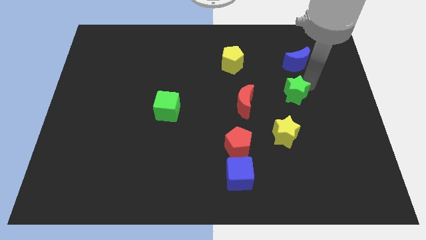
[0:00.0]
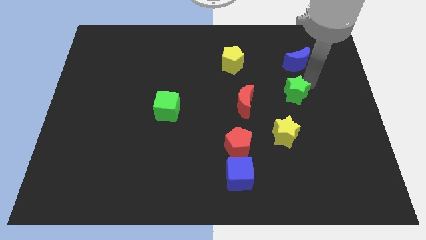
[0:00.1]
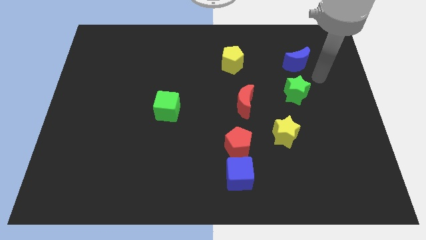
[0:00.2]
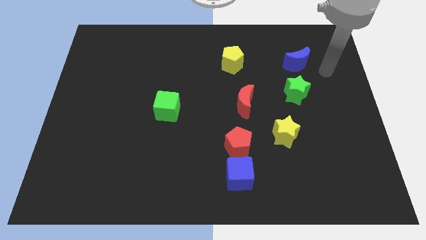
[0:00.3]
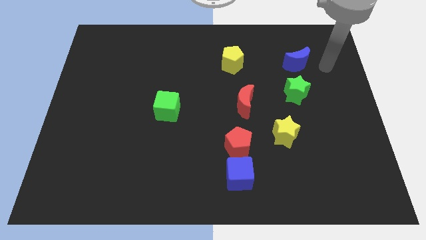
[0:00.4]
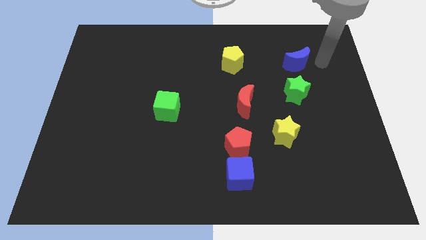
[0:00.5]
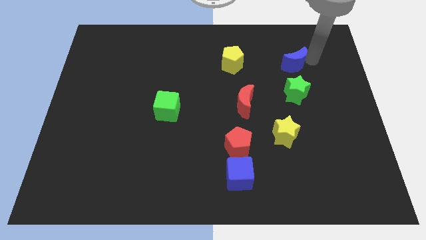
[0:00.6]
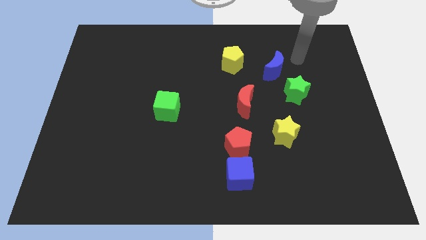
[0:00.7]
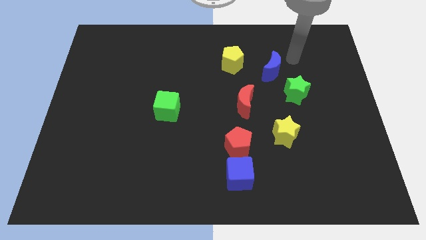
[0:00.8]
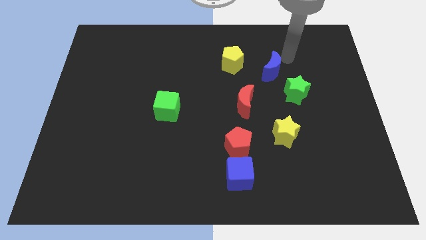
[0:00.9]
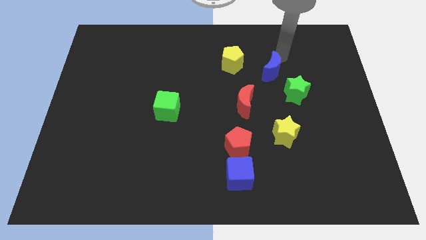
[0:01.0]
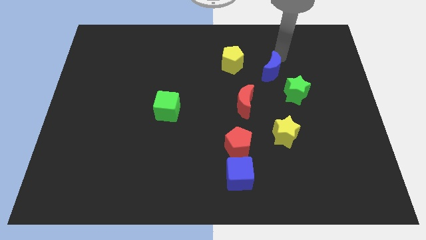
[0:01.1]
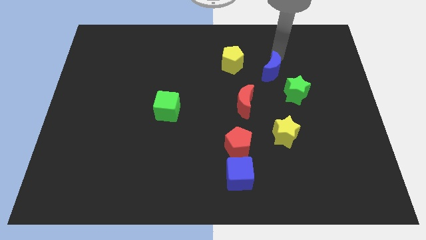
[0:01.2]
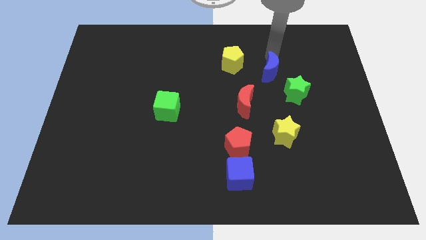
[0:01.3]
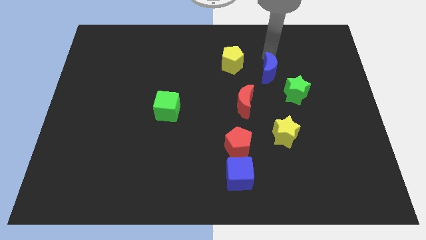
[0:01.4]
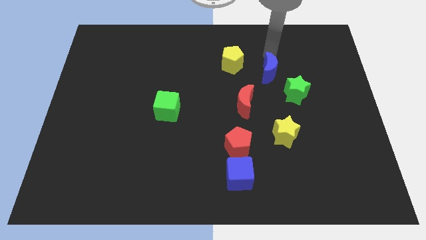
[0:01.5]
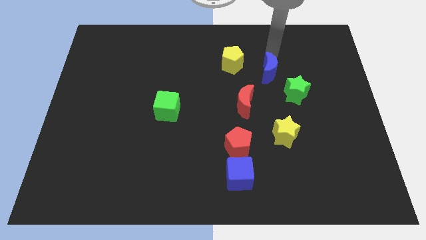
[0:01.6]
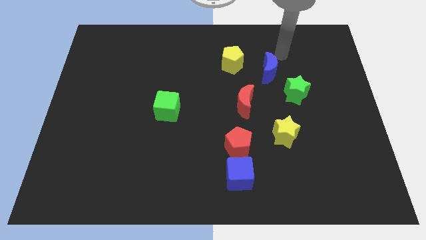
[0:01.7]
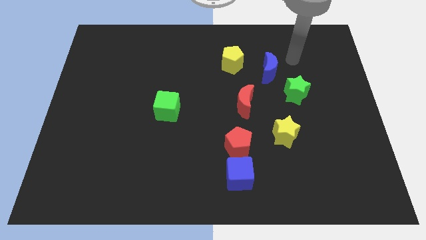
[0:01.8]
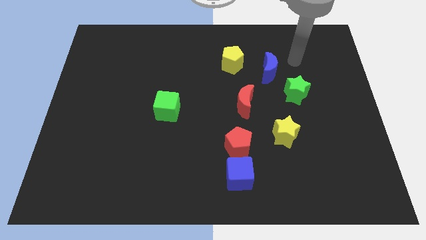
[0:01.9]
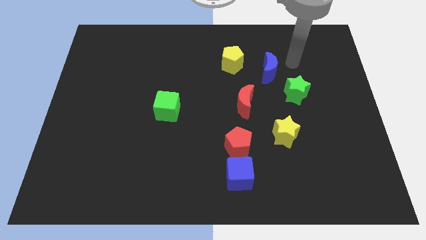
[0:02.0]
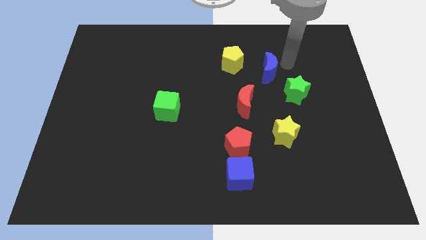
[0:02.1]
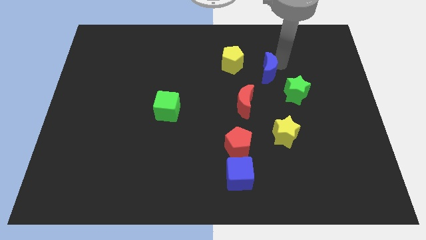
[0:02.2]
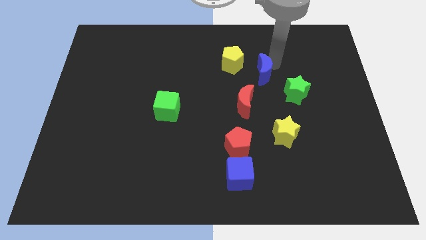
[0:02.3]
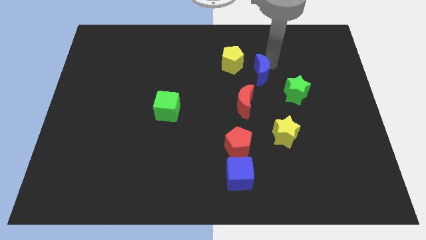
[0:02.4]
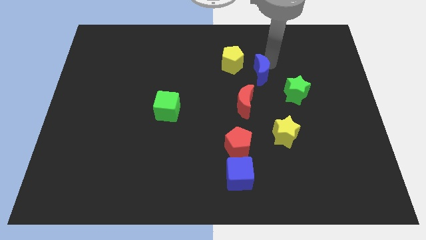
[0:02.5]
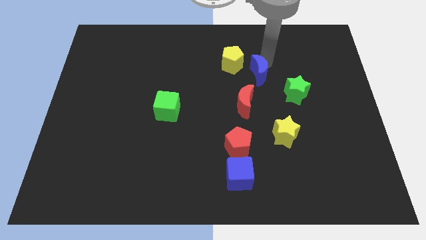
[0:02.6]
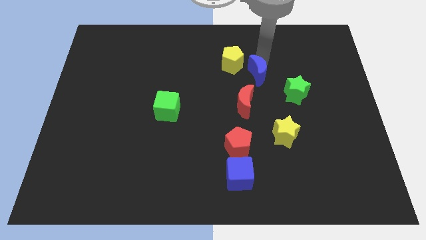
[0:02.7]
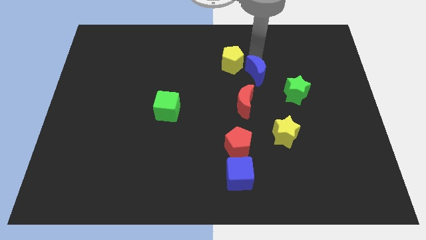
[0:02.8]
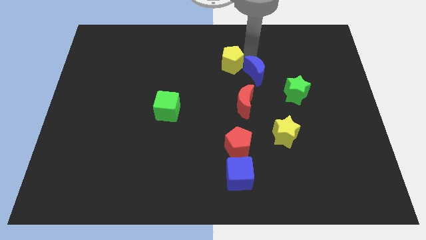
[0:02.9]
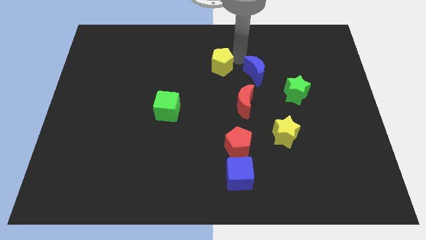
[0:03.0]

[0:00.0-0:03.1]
push the blue moon to the bottom left side of the yellow pentagon

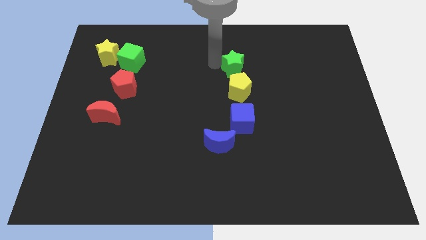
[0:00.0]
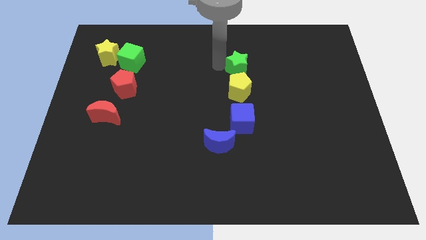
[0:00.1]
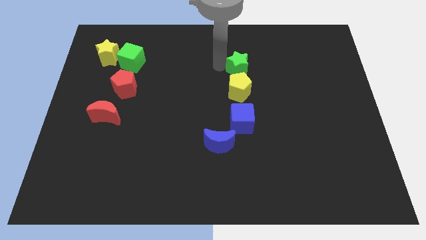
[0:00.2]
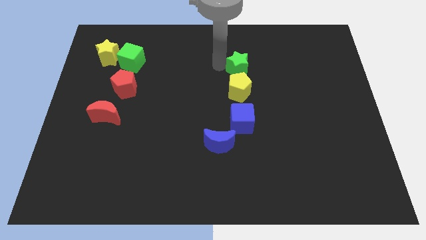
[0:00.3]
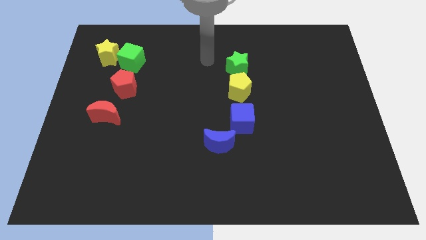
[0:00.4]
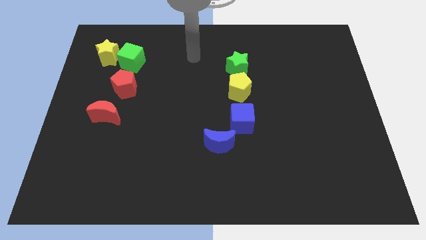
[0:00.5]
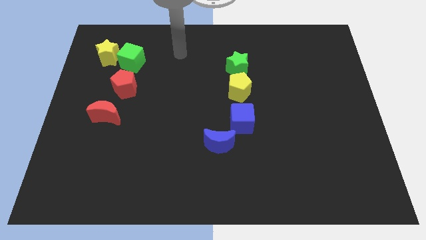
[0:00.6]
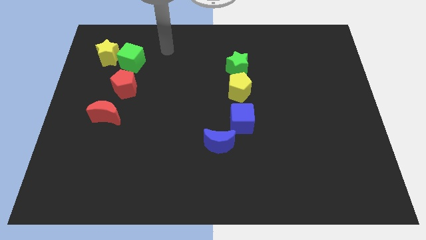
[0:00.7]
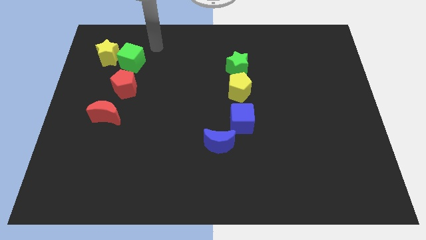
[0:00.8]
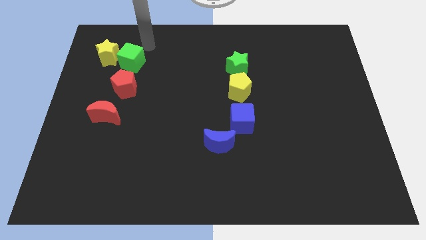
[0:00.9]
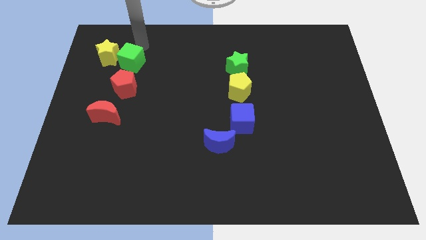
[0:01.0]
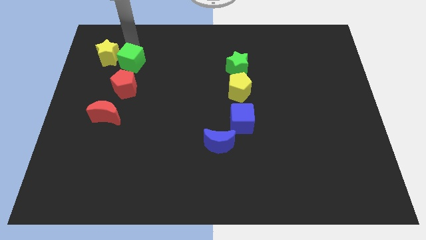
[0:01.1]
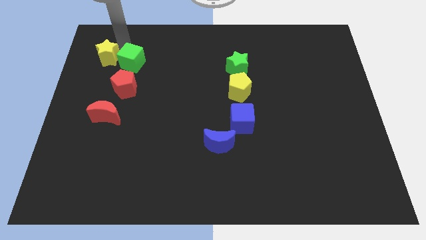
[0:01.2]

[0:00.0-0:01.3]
move your arm to the top left of the board

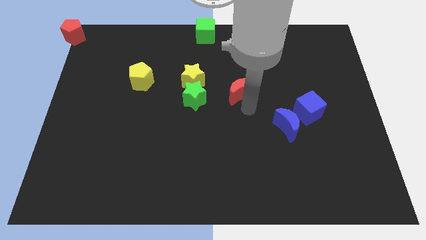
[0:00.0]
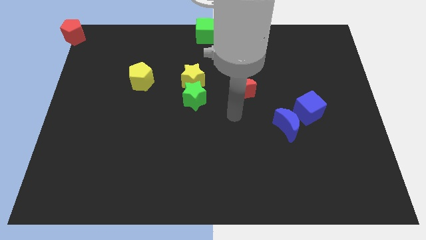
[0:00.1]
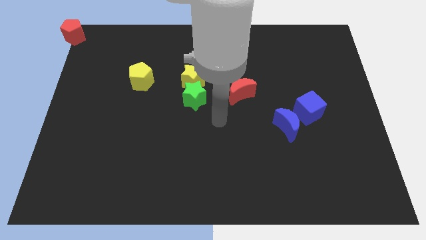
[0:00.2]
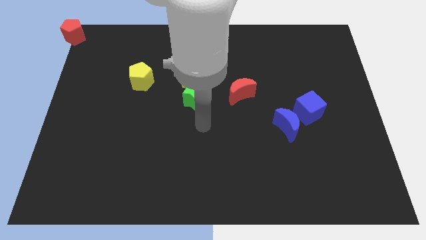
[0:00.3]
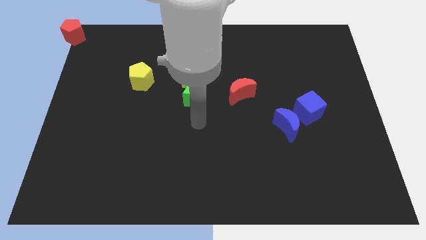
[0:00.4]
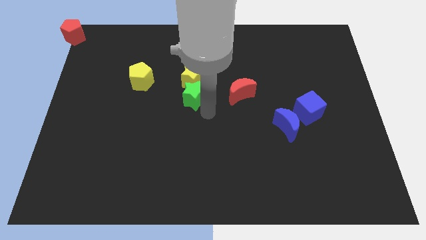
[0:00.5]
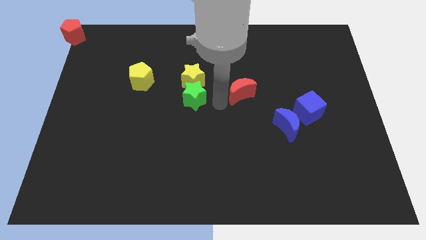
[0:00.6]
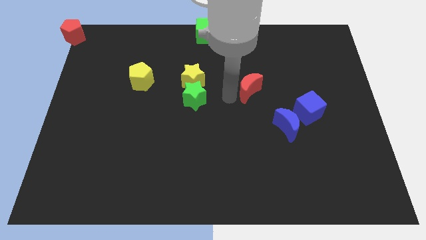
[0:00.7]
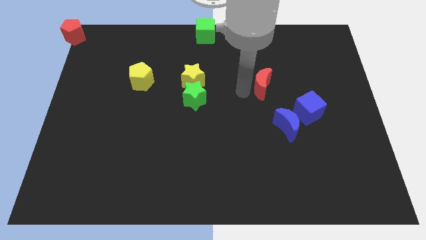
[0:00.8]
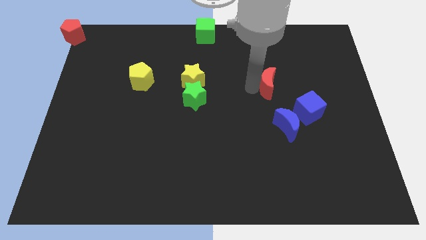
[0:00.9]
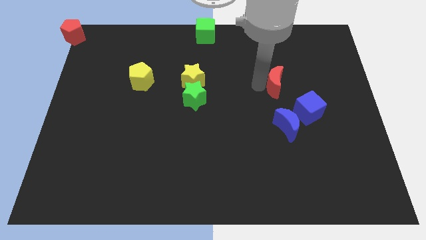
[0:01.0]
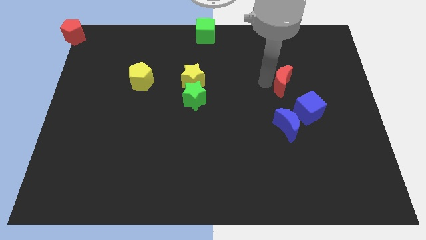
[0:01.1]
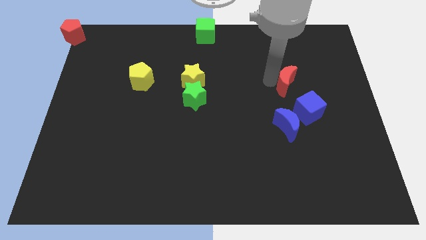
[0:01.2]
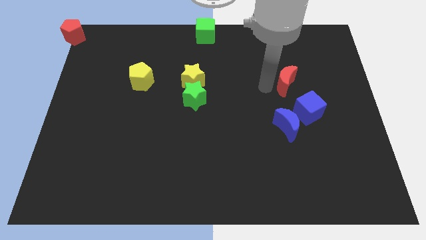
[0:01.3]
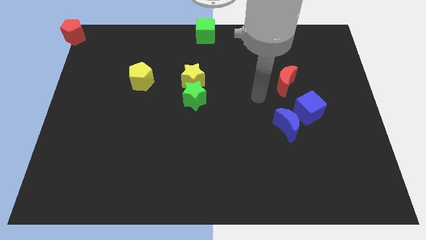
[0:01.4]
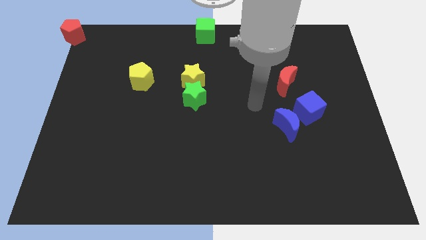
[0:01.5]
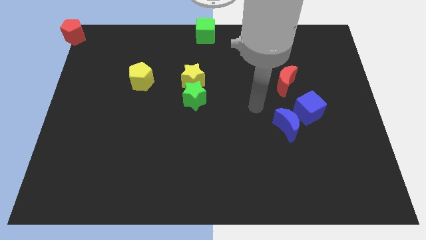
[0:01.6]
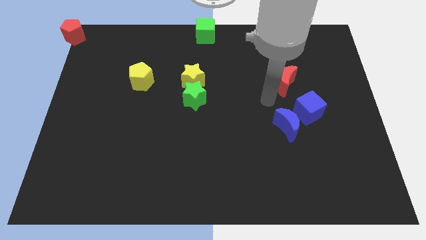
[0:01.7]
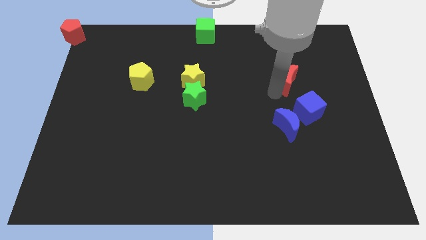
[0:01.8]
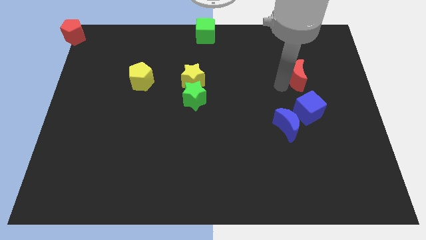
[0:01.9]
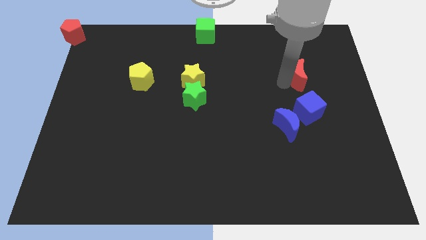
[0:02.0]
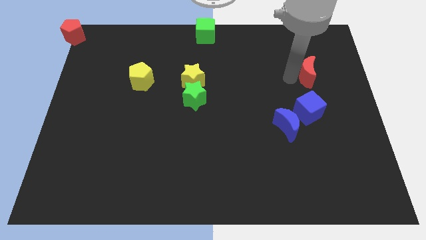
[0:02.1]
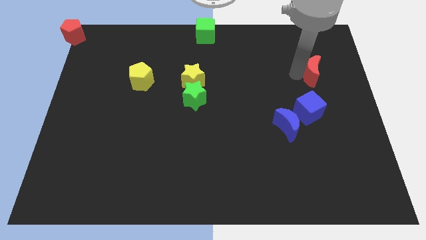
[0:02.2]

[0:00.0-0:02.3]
push the red crescent above the blue cube

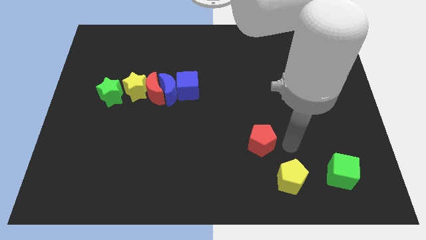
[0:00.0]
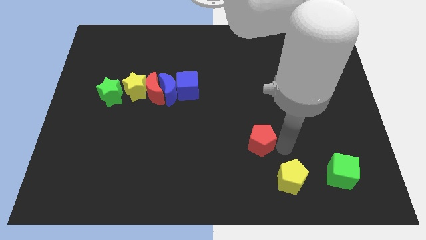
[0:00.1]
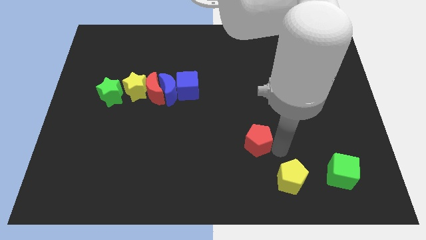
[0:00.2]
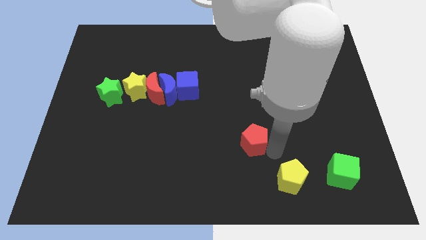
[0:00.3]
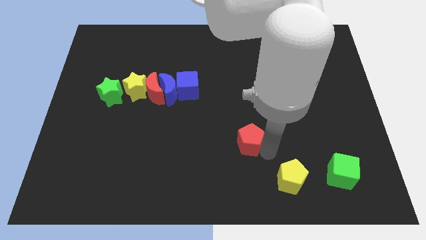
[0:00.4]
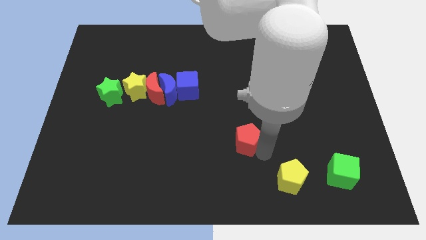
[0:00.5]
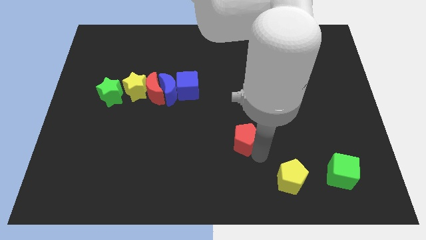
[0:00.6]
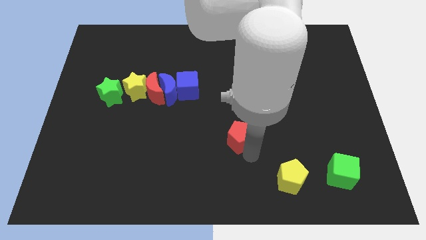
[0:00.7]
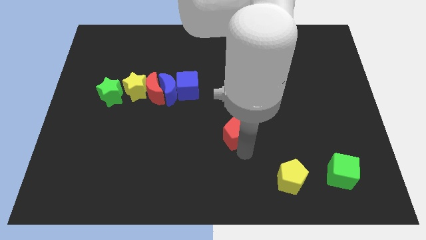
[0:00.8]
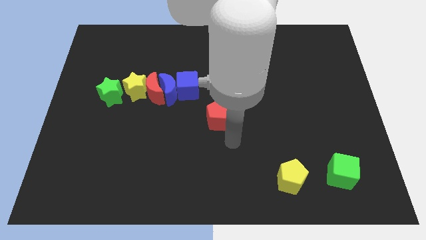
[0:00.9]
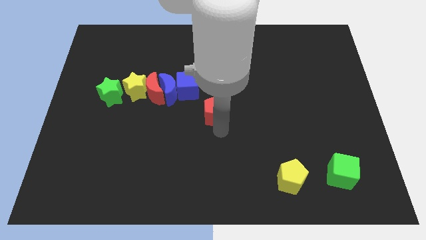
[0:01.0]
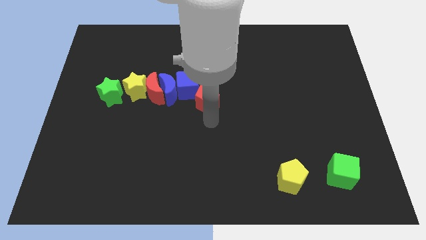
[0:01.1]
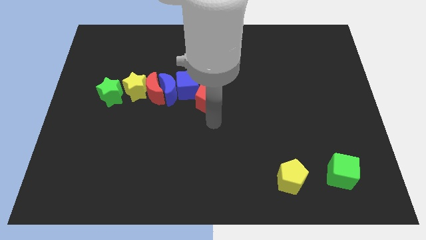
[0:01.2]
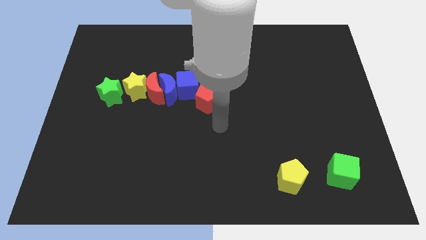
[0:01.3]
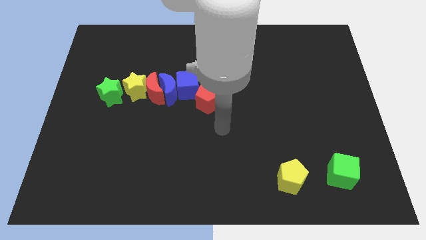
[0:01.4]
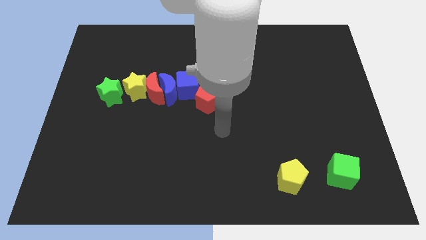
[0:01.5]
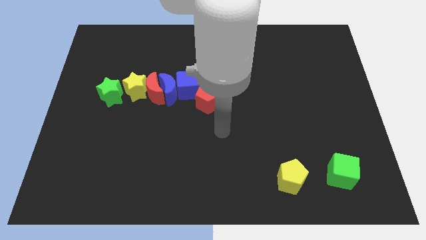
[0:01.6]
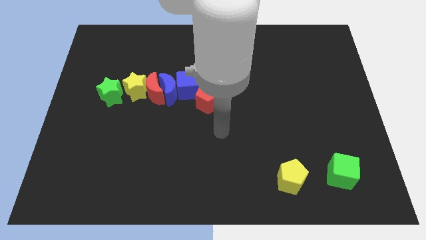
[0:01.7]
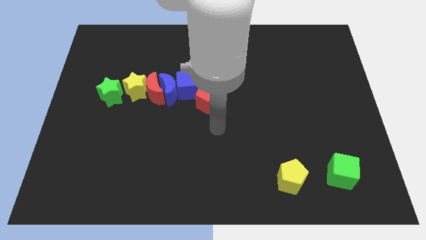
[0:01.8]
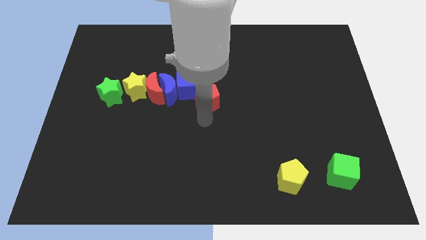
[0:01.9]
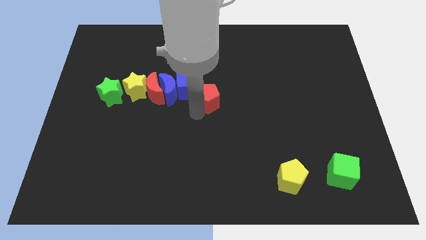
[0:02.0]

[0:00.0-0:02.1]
push the red pentagon into the blue cube

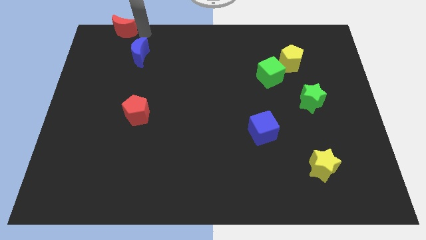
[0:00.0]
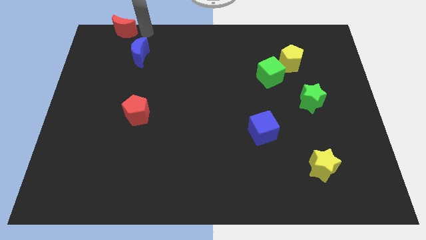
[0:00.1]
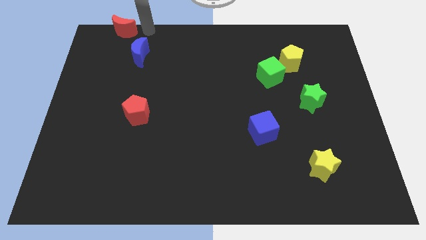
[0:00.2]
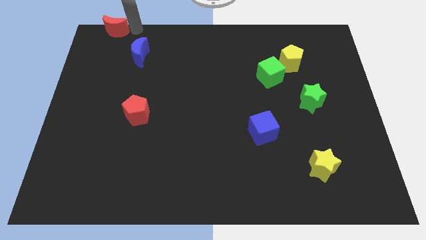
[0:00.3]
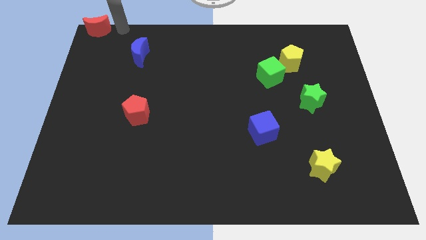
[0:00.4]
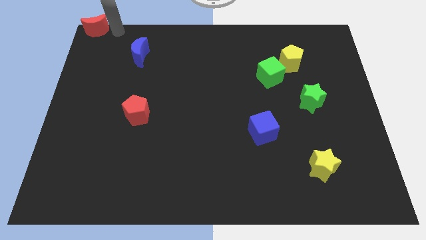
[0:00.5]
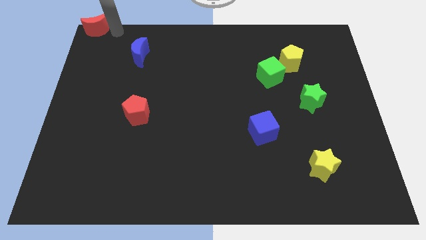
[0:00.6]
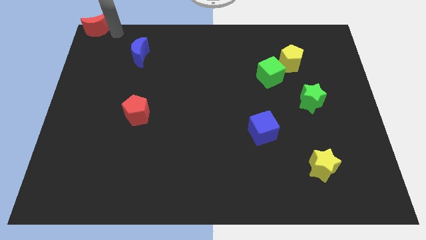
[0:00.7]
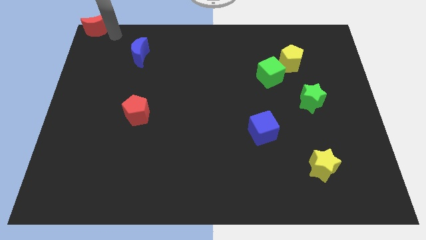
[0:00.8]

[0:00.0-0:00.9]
move the red moon to the top right
